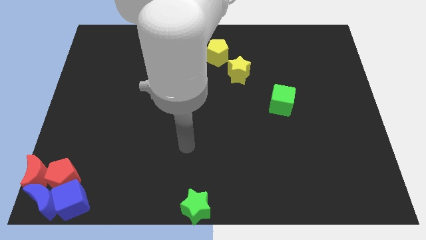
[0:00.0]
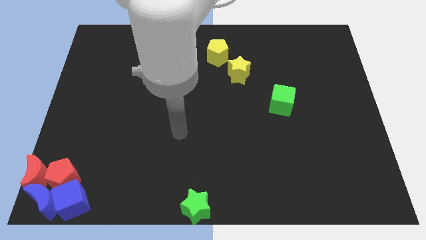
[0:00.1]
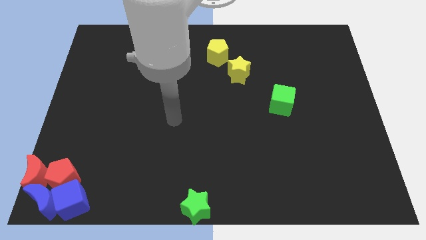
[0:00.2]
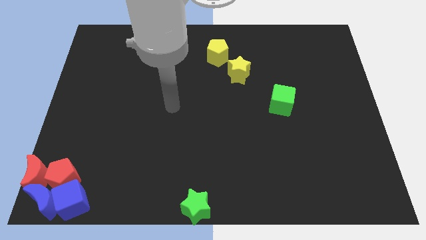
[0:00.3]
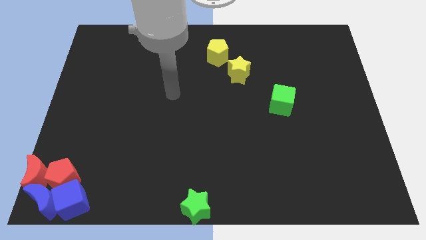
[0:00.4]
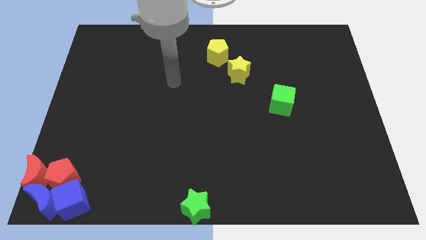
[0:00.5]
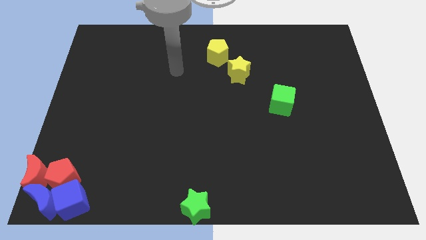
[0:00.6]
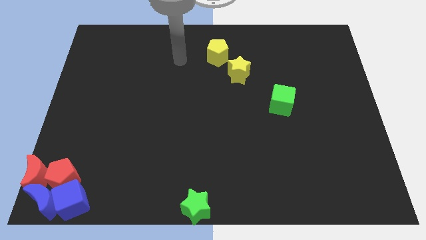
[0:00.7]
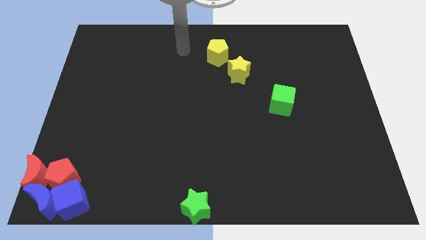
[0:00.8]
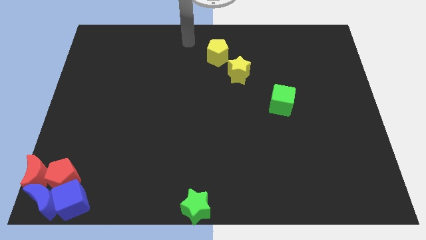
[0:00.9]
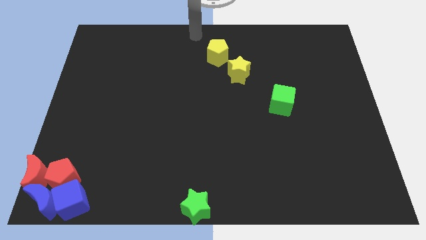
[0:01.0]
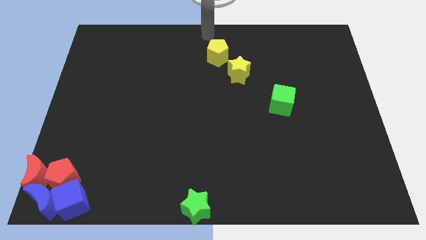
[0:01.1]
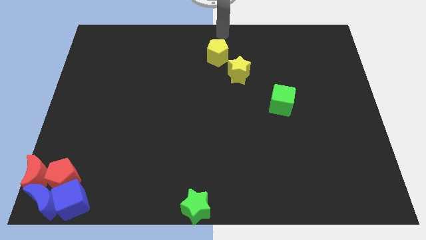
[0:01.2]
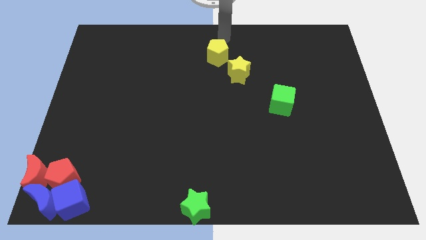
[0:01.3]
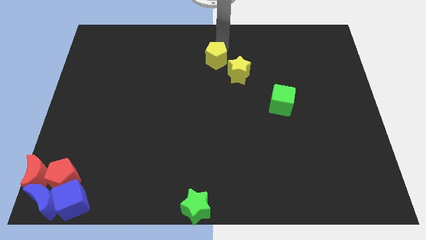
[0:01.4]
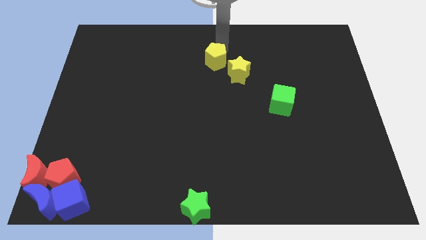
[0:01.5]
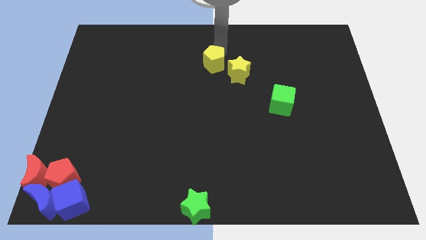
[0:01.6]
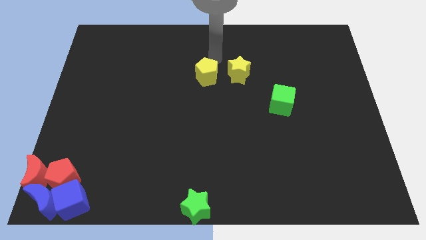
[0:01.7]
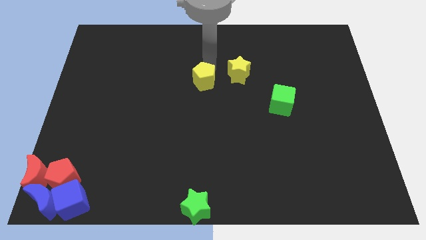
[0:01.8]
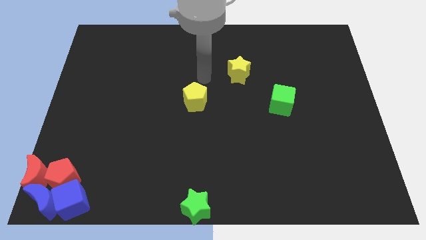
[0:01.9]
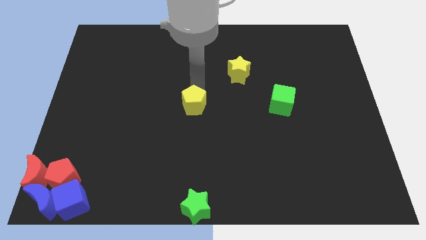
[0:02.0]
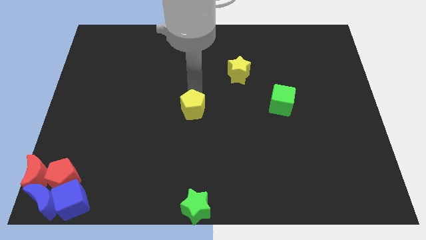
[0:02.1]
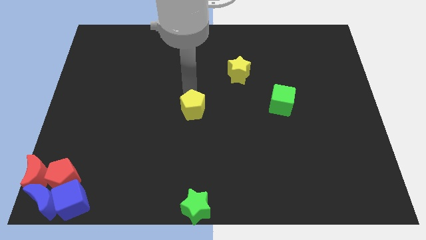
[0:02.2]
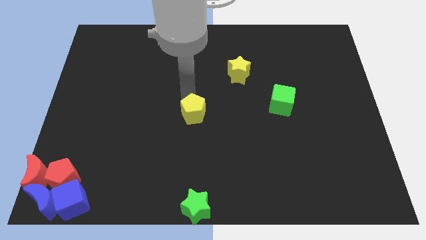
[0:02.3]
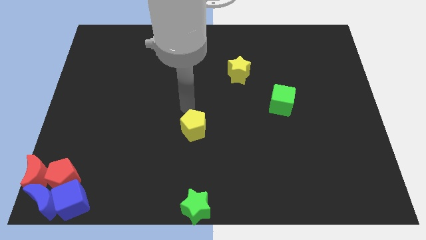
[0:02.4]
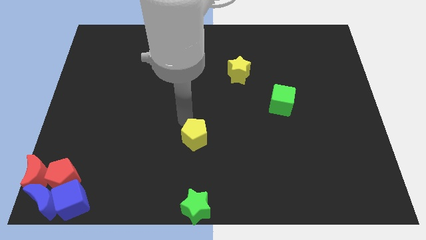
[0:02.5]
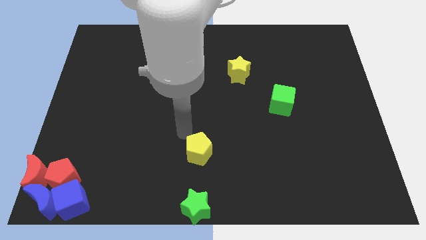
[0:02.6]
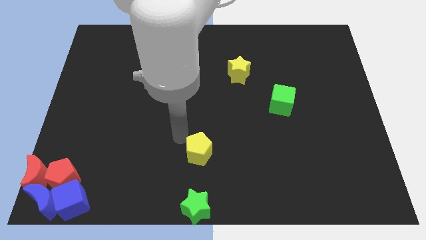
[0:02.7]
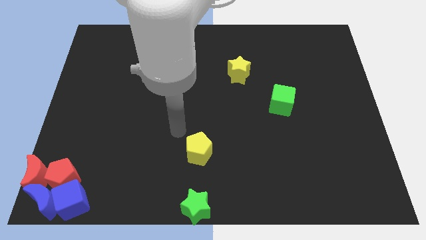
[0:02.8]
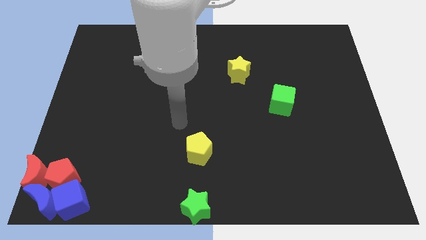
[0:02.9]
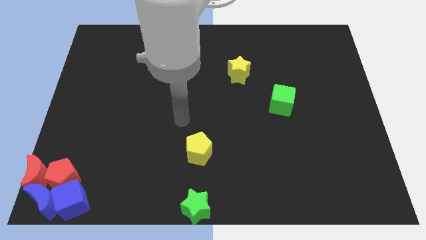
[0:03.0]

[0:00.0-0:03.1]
place yellow pentagon above the green star

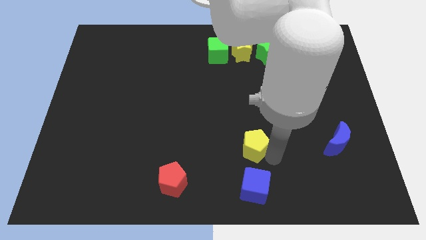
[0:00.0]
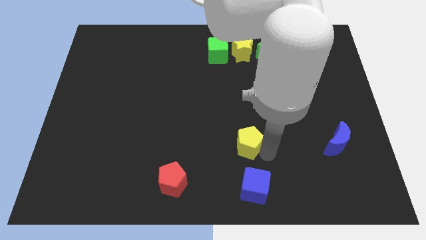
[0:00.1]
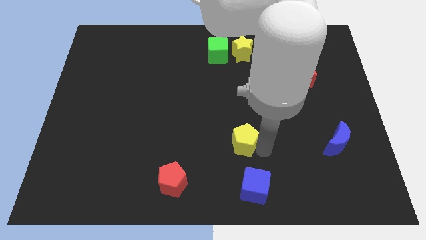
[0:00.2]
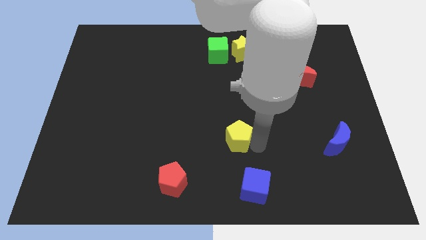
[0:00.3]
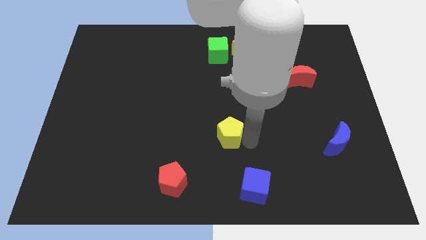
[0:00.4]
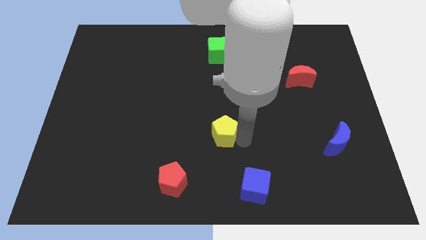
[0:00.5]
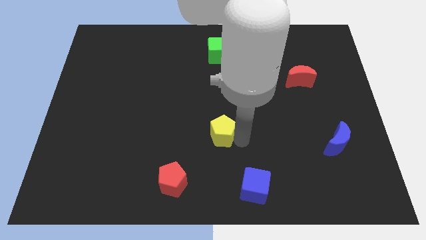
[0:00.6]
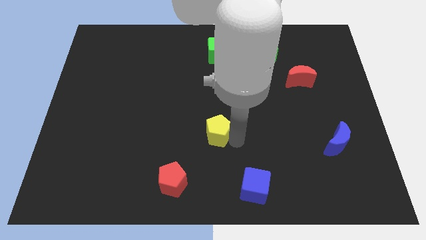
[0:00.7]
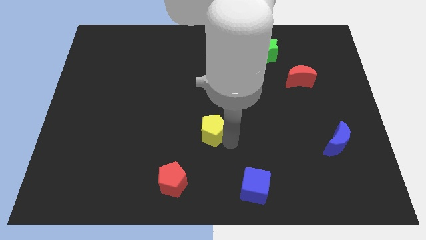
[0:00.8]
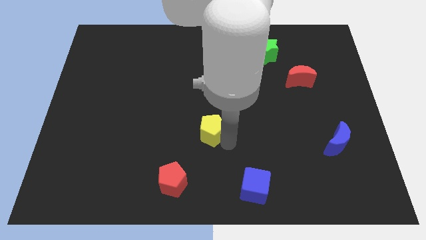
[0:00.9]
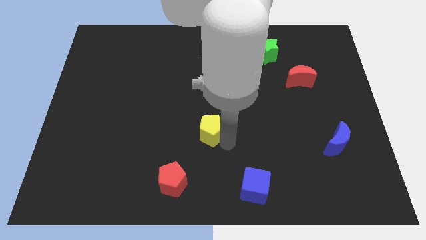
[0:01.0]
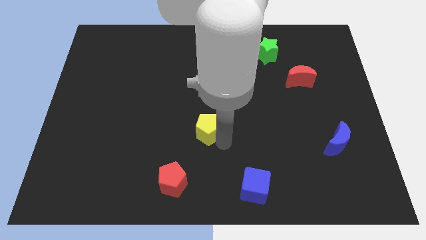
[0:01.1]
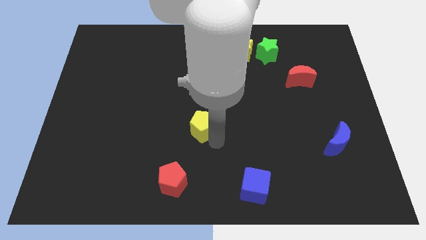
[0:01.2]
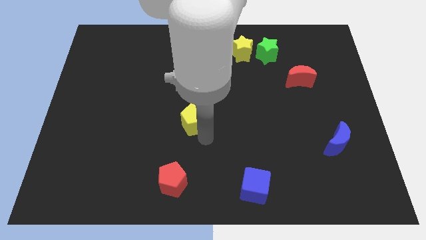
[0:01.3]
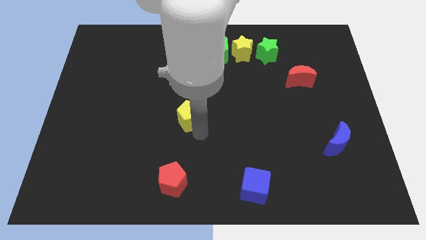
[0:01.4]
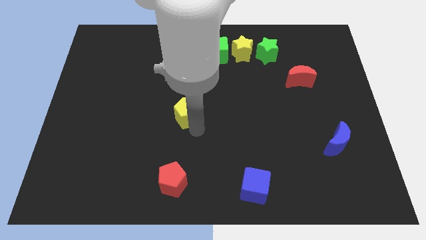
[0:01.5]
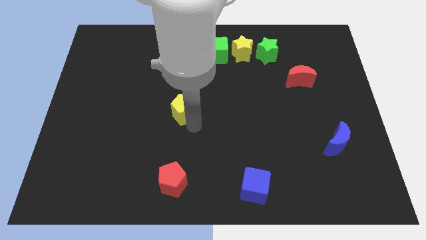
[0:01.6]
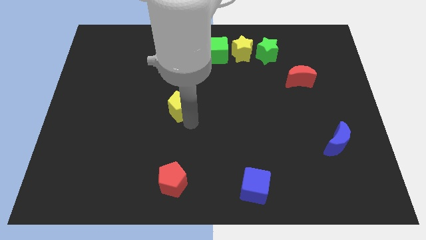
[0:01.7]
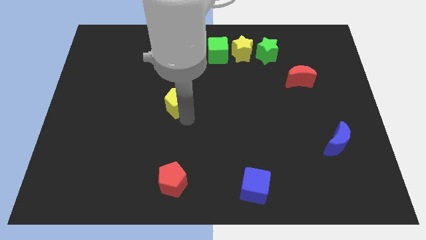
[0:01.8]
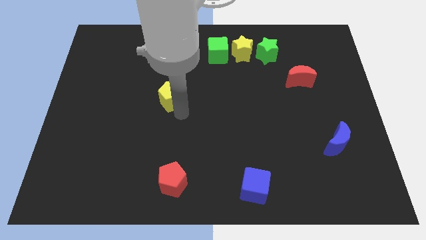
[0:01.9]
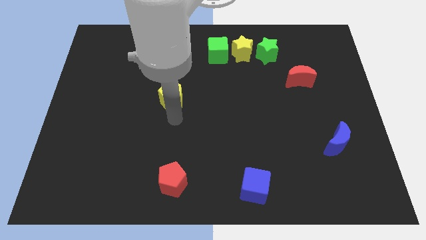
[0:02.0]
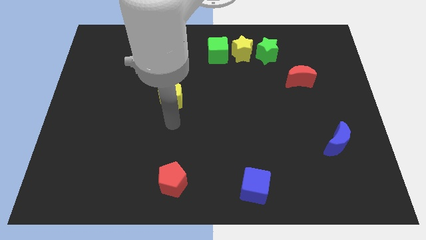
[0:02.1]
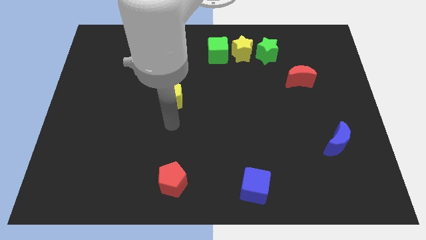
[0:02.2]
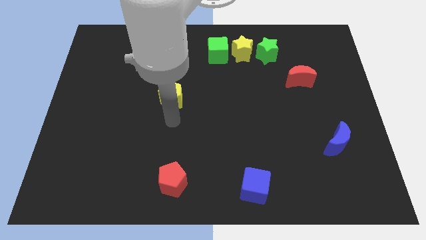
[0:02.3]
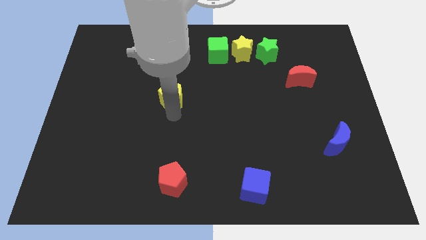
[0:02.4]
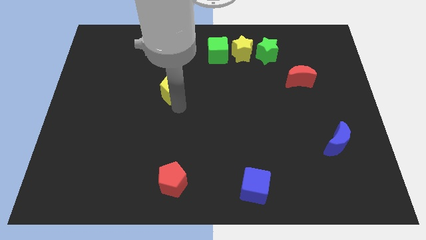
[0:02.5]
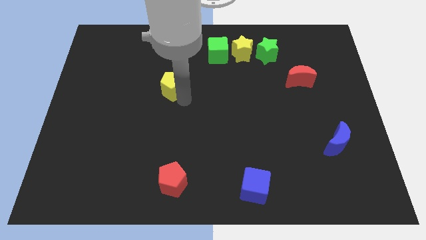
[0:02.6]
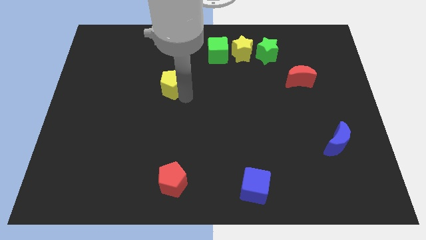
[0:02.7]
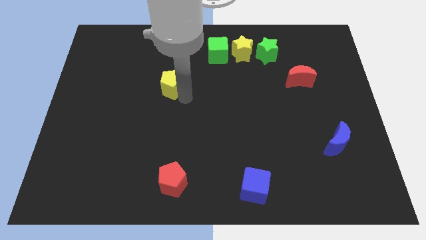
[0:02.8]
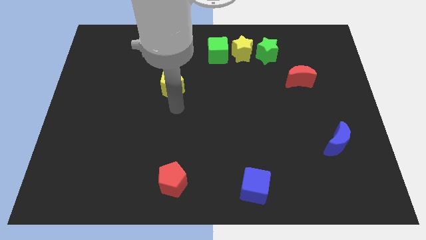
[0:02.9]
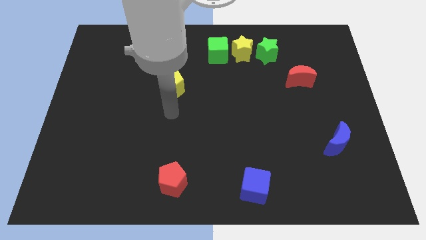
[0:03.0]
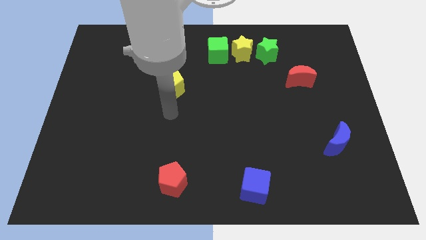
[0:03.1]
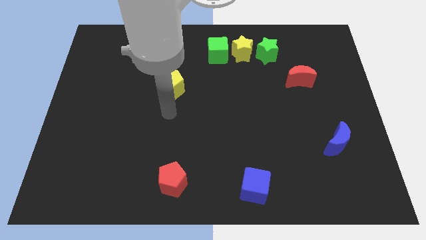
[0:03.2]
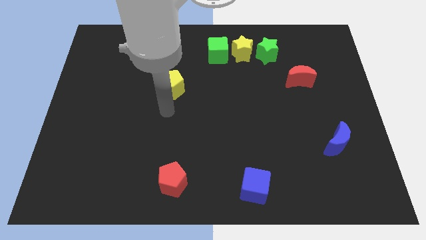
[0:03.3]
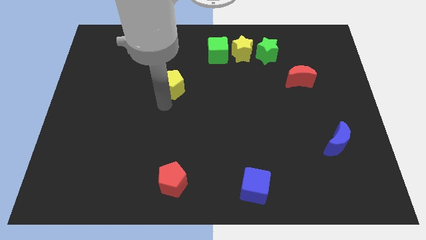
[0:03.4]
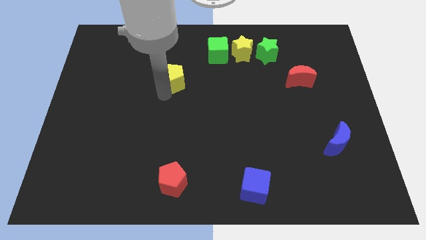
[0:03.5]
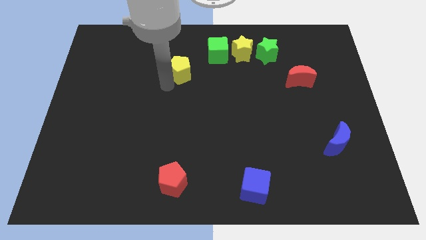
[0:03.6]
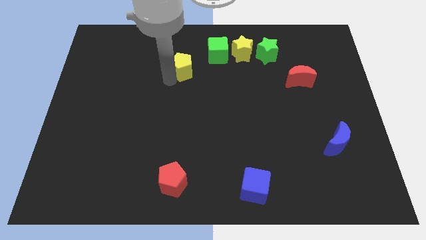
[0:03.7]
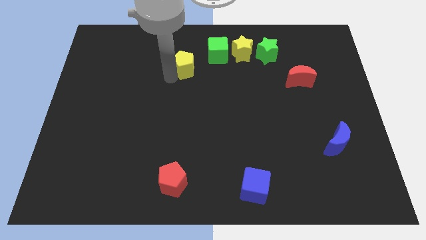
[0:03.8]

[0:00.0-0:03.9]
move yellow pentagon upwards

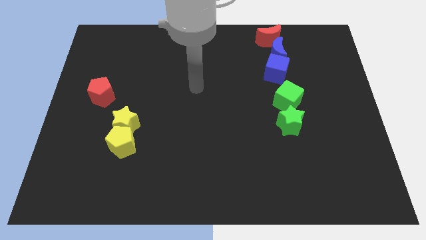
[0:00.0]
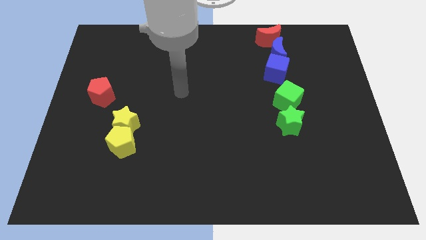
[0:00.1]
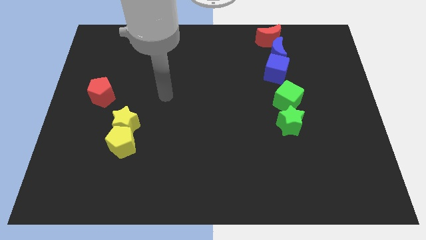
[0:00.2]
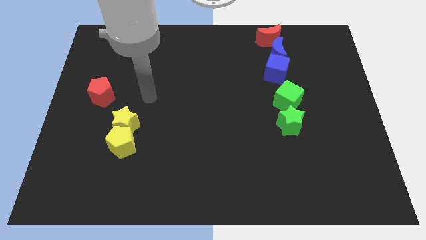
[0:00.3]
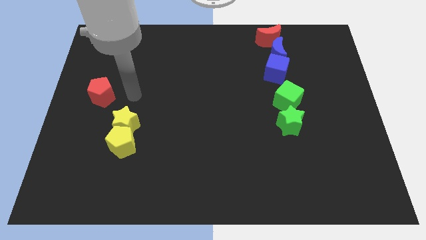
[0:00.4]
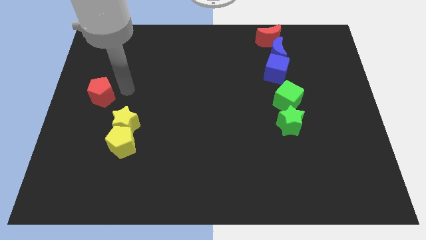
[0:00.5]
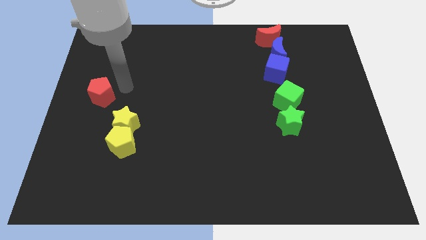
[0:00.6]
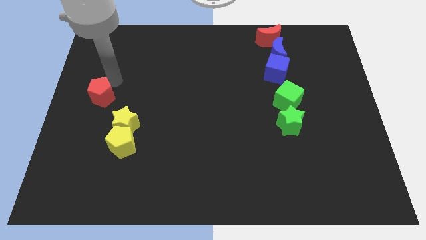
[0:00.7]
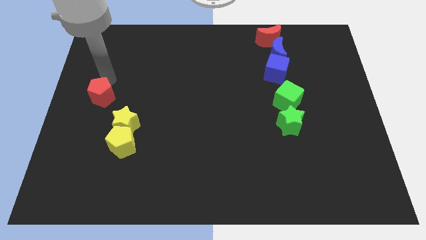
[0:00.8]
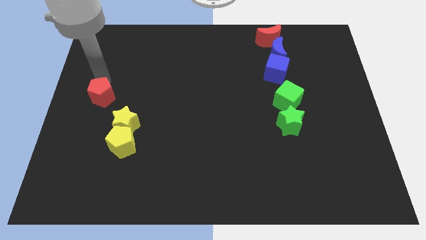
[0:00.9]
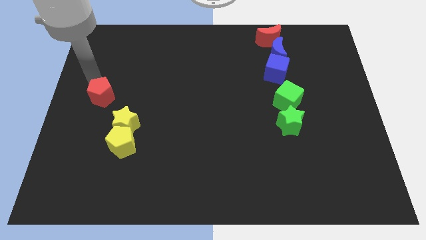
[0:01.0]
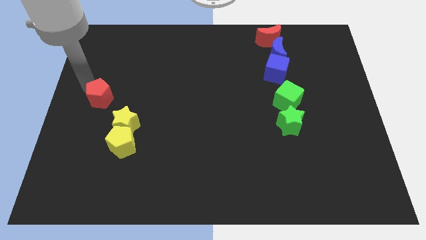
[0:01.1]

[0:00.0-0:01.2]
tap the red pentagon

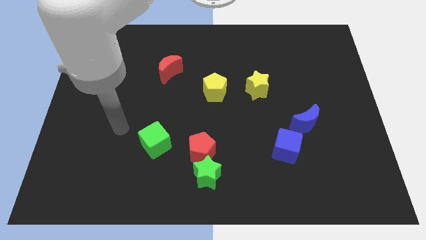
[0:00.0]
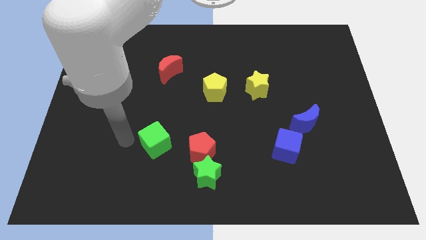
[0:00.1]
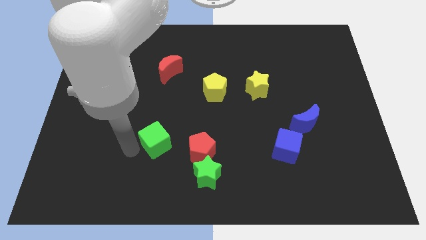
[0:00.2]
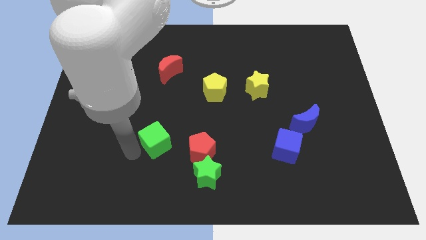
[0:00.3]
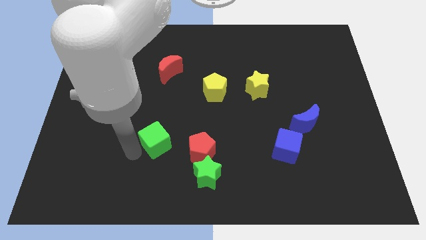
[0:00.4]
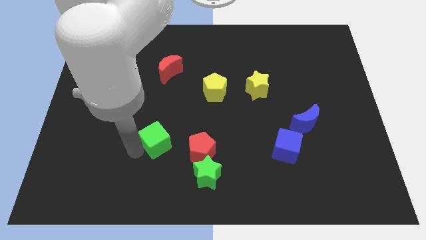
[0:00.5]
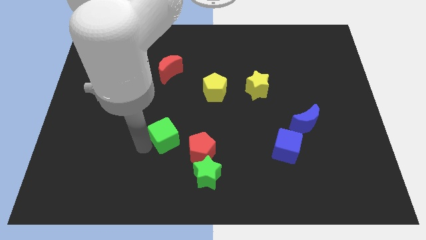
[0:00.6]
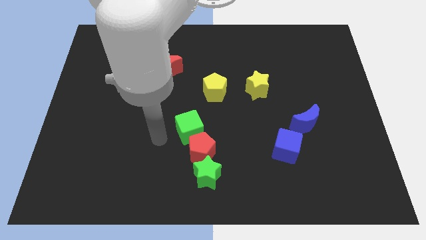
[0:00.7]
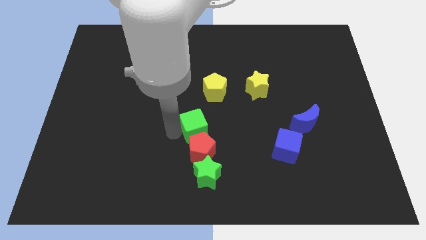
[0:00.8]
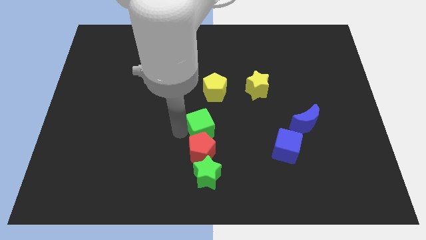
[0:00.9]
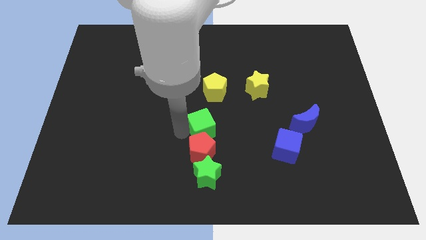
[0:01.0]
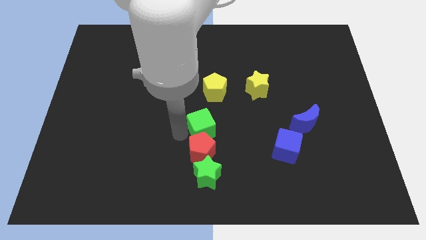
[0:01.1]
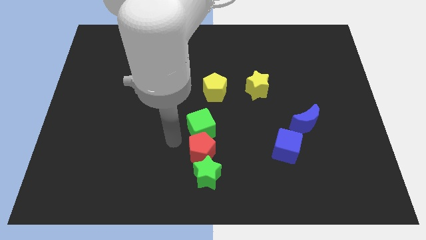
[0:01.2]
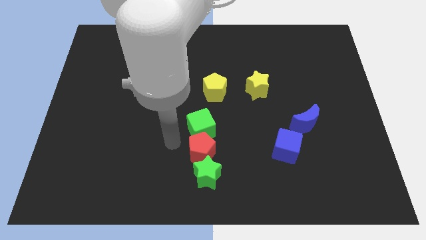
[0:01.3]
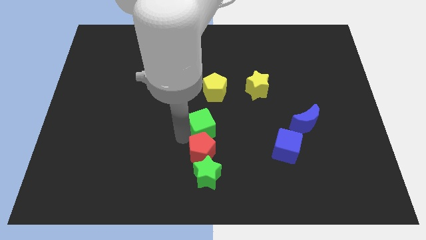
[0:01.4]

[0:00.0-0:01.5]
place the green cube above the red pentagon
